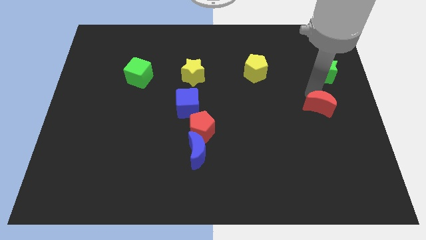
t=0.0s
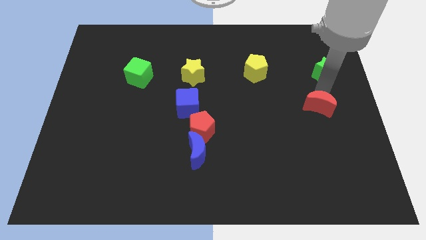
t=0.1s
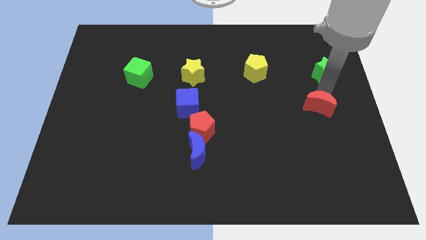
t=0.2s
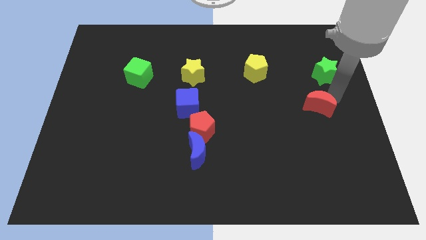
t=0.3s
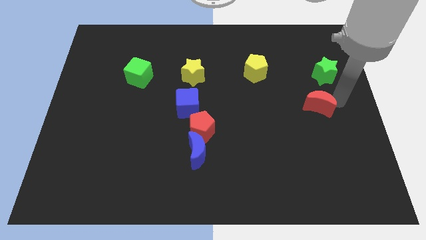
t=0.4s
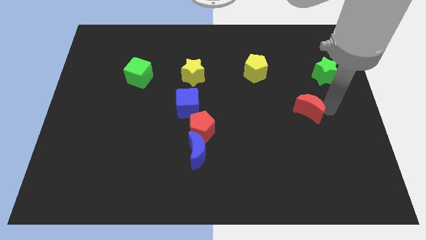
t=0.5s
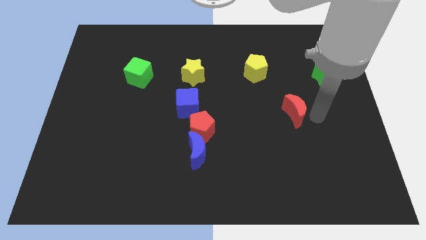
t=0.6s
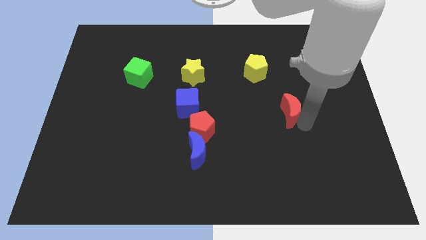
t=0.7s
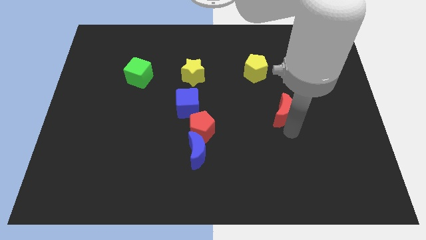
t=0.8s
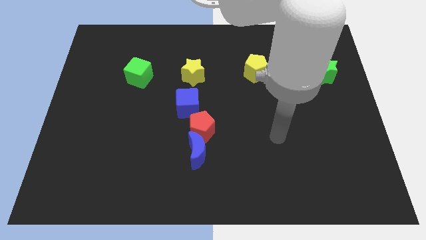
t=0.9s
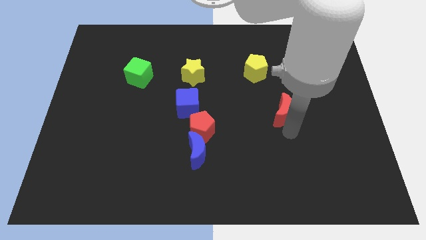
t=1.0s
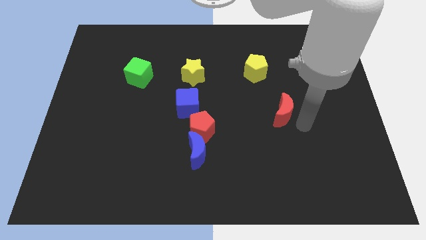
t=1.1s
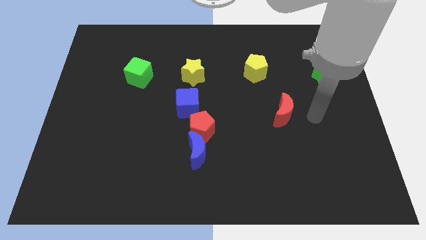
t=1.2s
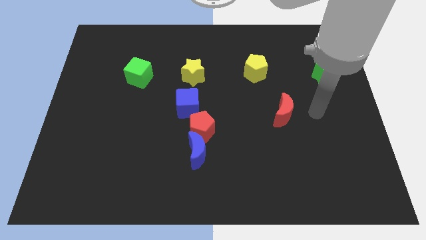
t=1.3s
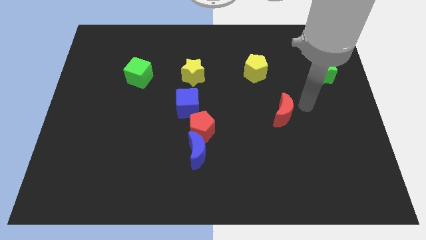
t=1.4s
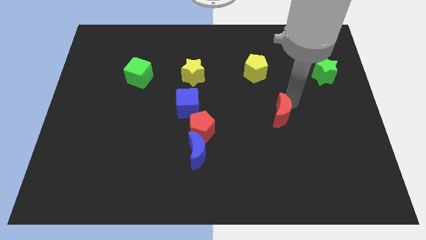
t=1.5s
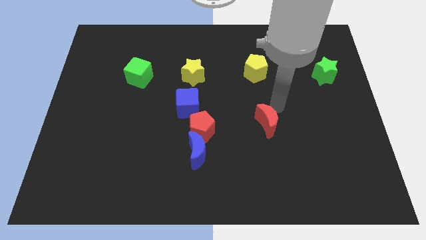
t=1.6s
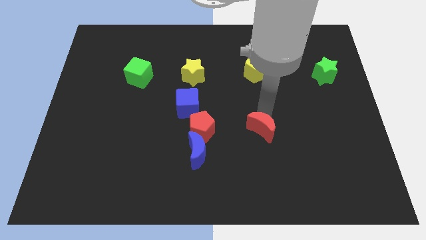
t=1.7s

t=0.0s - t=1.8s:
move the red moon below the yellow pentagon

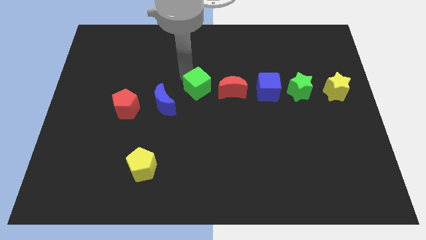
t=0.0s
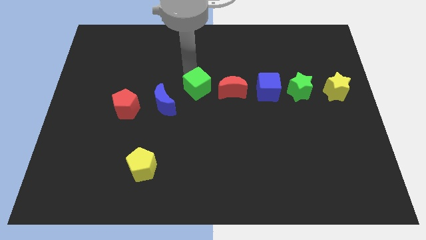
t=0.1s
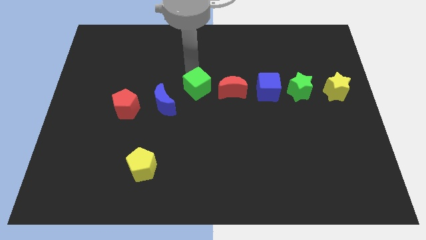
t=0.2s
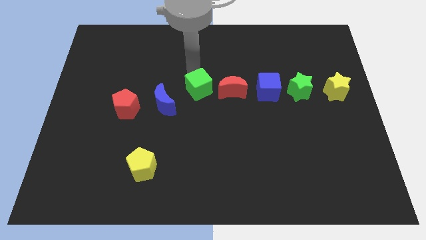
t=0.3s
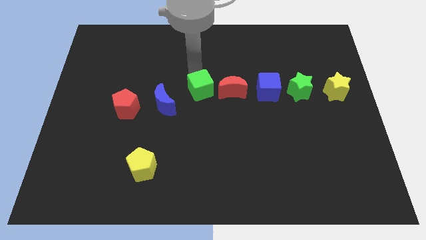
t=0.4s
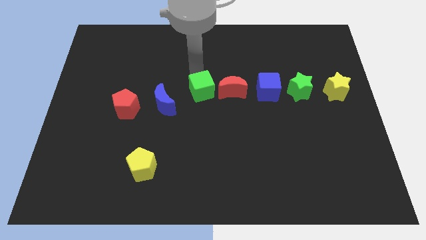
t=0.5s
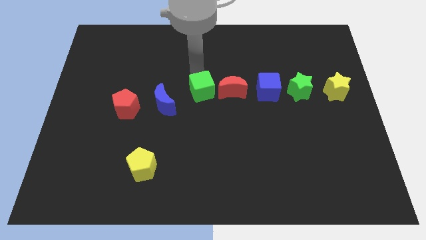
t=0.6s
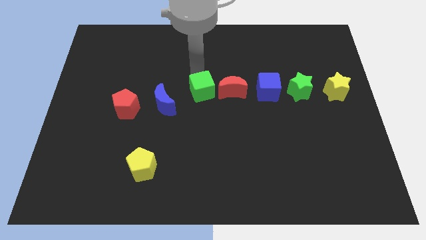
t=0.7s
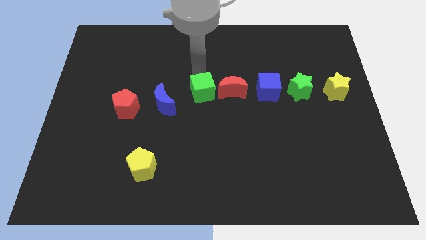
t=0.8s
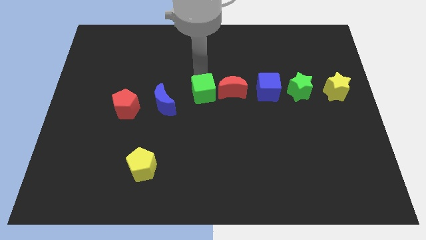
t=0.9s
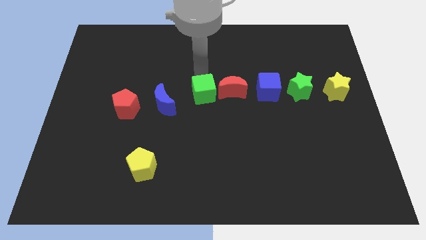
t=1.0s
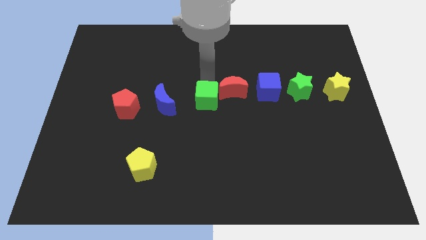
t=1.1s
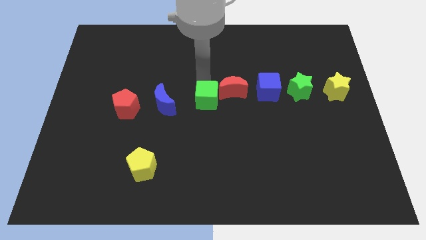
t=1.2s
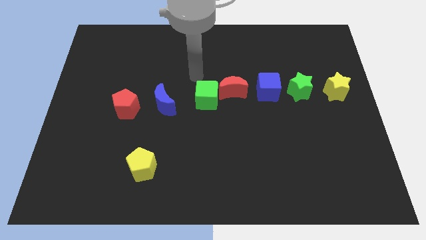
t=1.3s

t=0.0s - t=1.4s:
move green cube slightly down

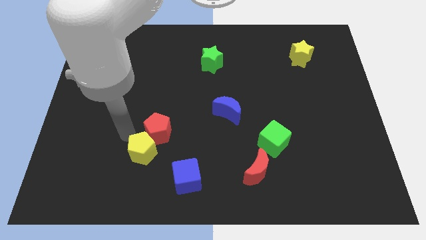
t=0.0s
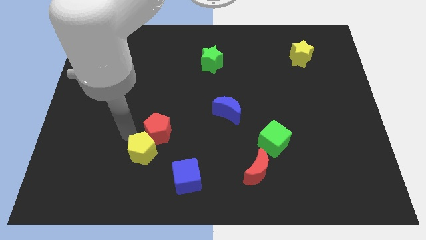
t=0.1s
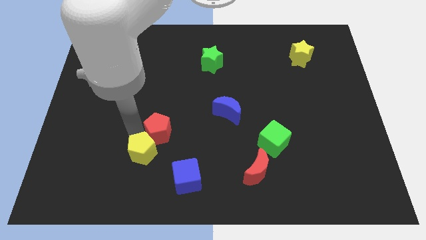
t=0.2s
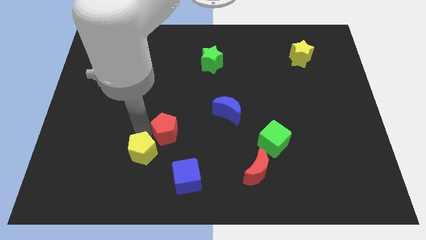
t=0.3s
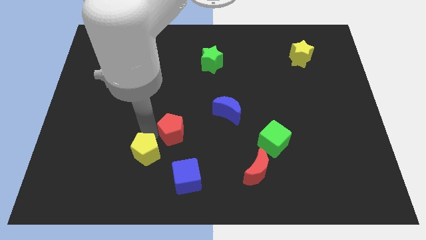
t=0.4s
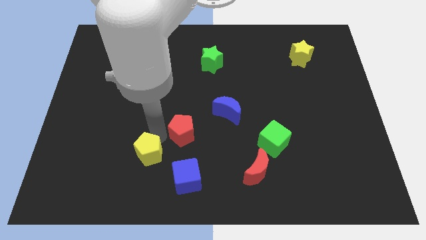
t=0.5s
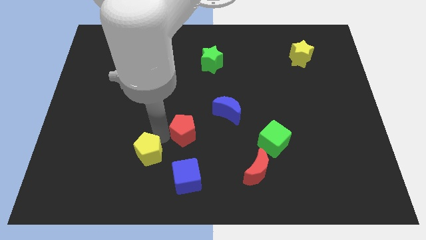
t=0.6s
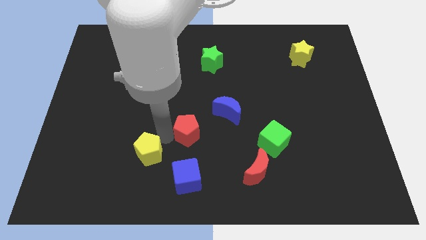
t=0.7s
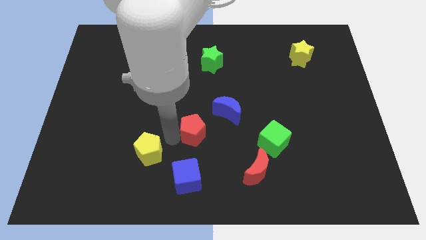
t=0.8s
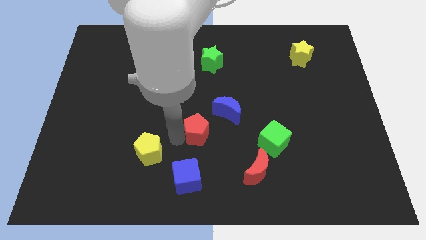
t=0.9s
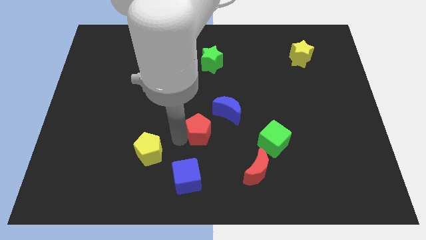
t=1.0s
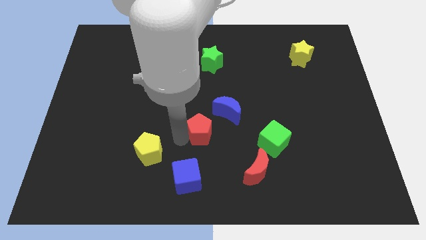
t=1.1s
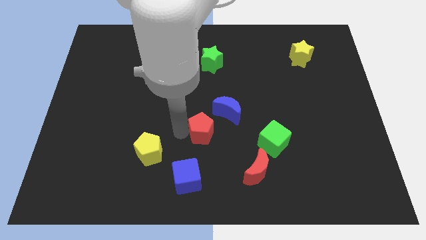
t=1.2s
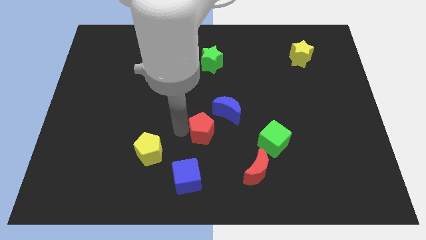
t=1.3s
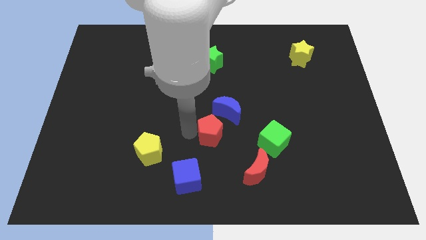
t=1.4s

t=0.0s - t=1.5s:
move the red pentagon in between blue cube and blue crescent

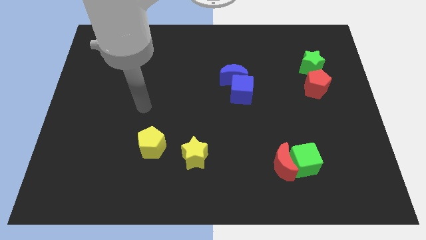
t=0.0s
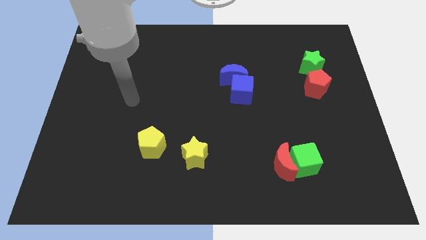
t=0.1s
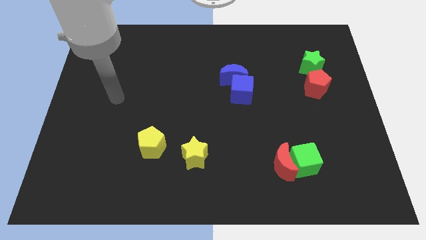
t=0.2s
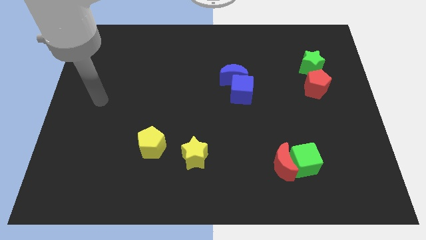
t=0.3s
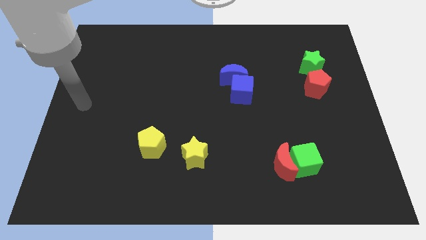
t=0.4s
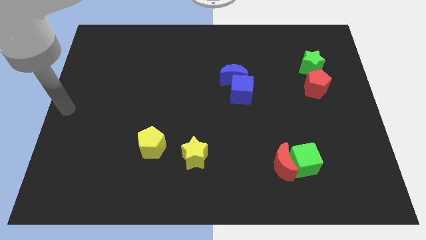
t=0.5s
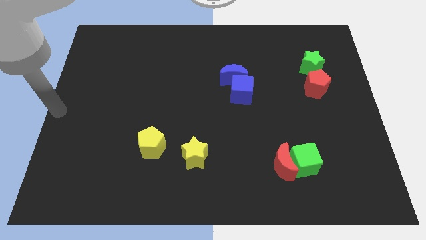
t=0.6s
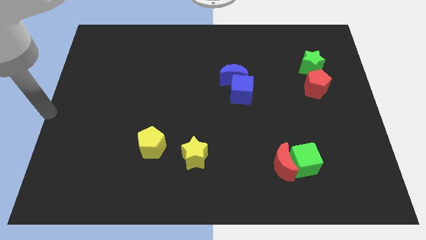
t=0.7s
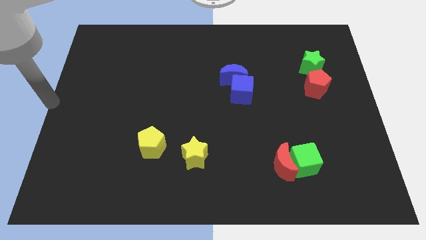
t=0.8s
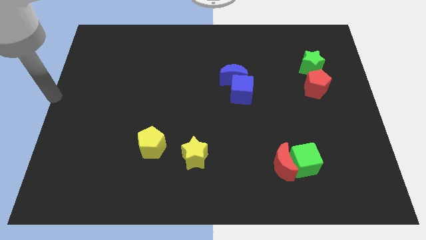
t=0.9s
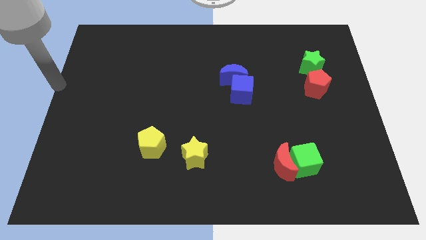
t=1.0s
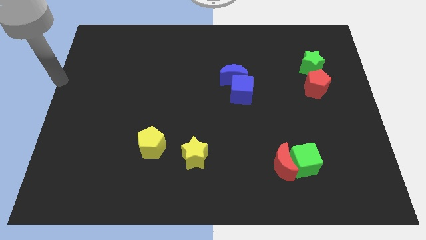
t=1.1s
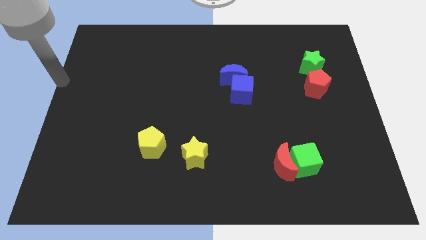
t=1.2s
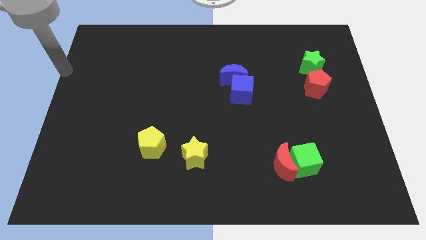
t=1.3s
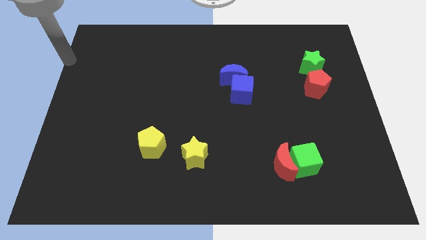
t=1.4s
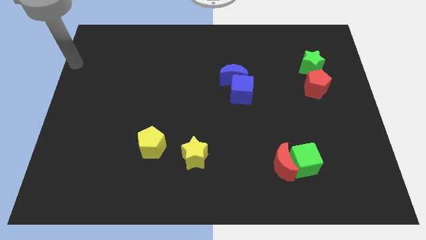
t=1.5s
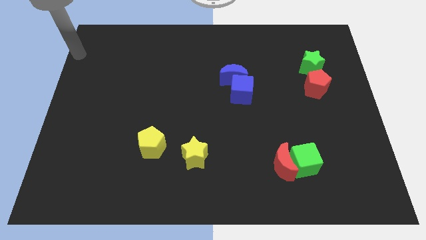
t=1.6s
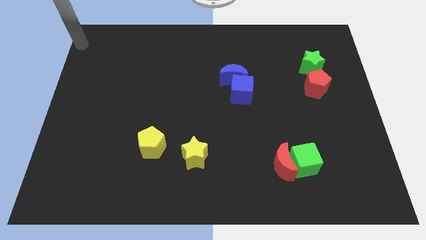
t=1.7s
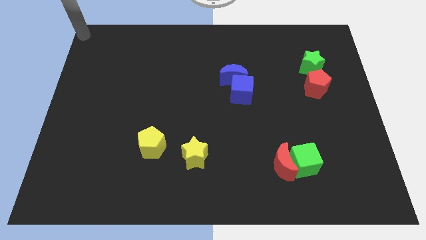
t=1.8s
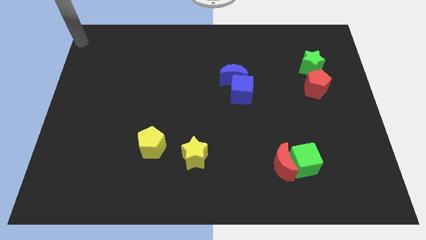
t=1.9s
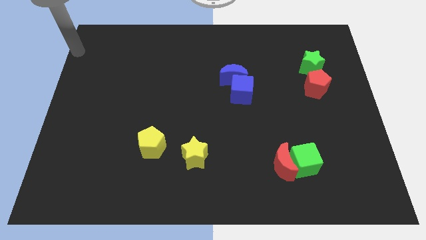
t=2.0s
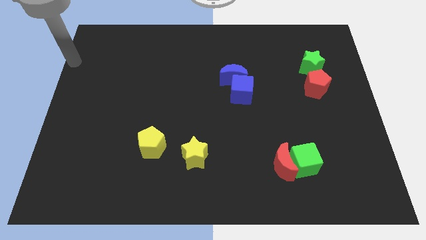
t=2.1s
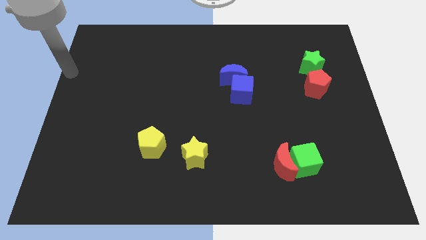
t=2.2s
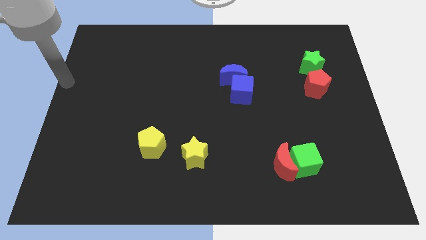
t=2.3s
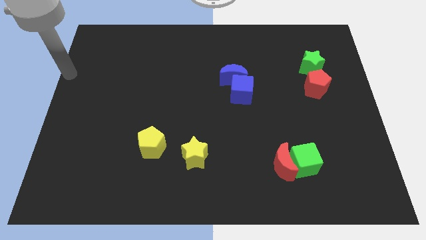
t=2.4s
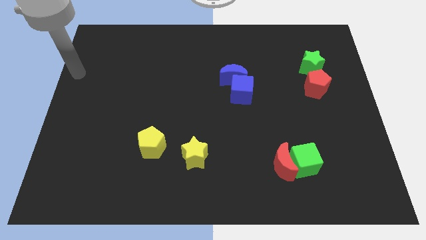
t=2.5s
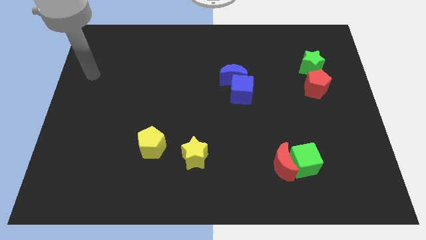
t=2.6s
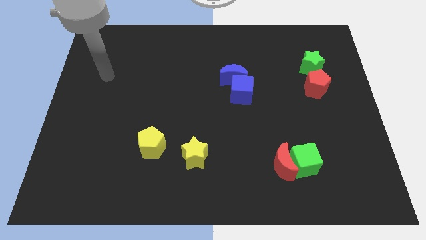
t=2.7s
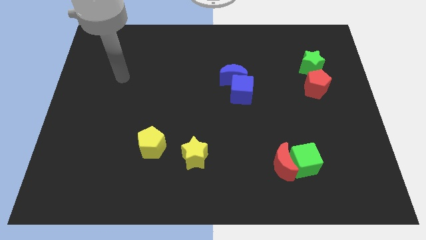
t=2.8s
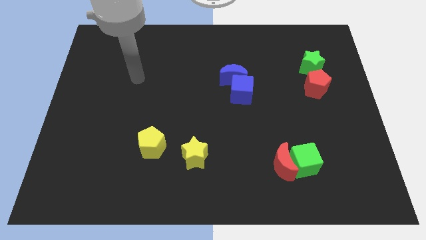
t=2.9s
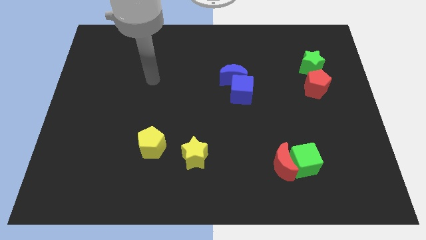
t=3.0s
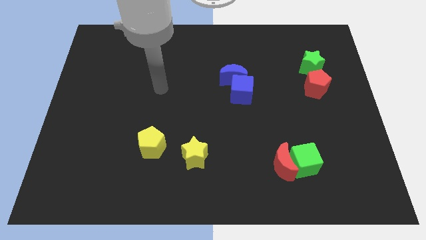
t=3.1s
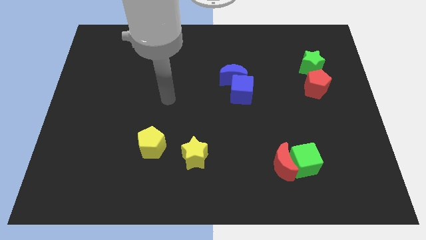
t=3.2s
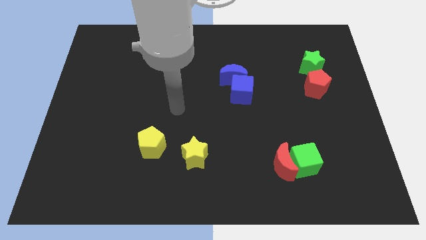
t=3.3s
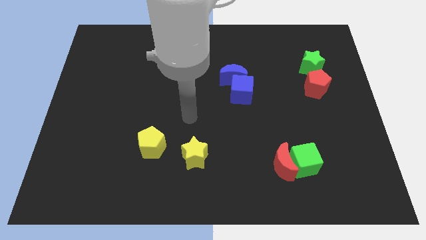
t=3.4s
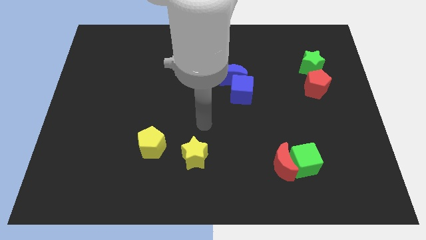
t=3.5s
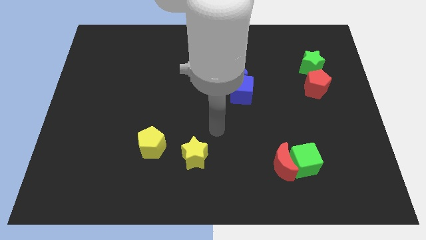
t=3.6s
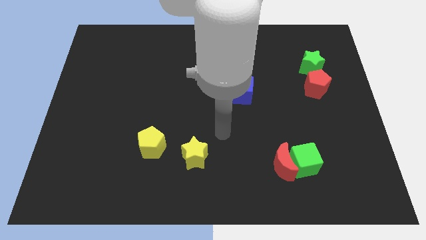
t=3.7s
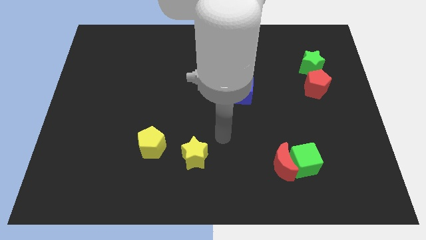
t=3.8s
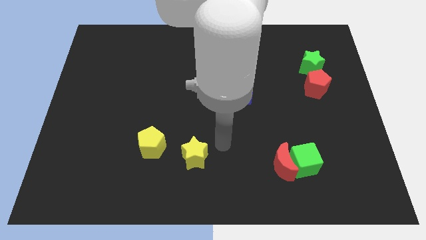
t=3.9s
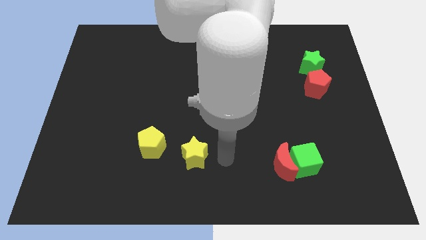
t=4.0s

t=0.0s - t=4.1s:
place your arm to the right of the yellow star

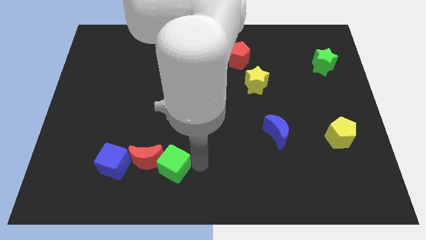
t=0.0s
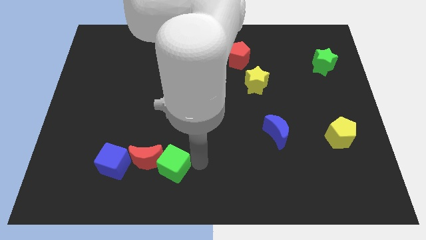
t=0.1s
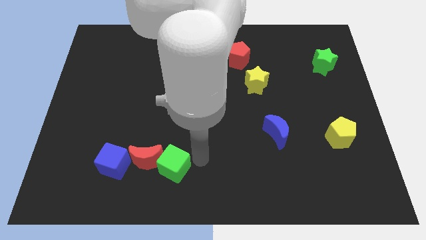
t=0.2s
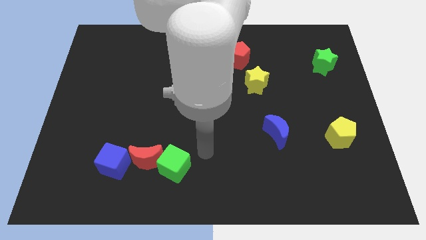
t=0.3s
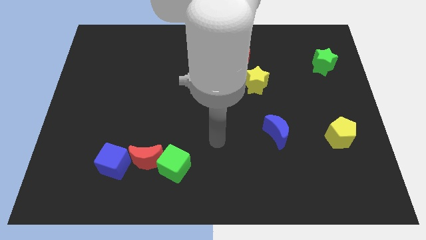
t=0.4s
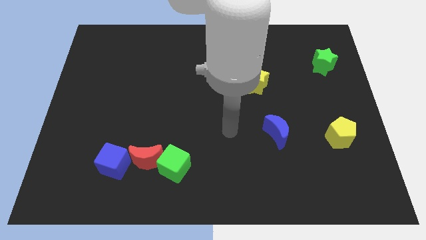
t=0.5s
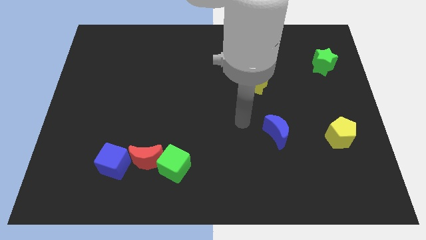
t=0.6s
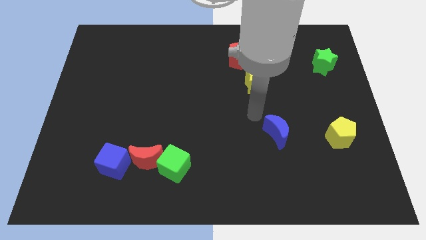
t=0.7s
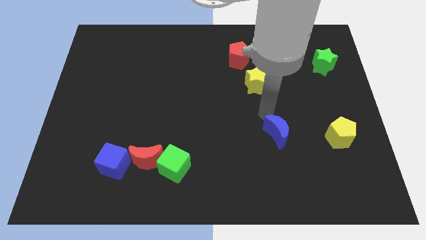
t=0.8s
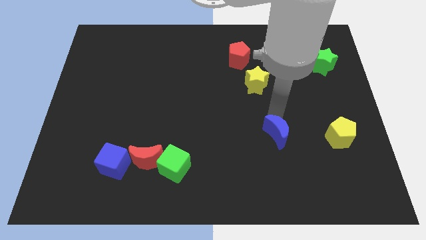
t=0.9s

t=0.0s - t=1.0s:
move the arm above the blue moon
